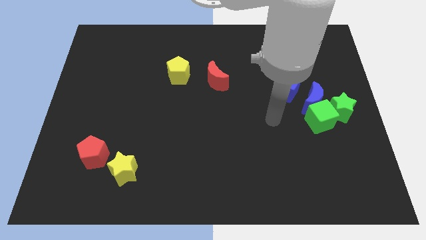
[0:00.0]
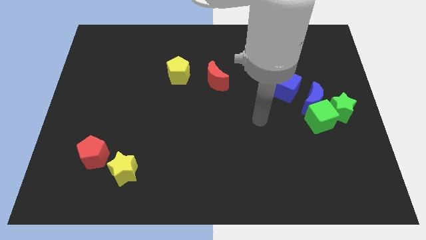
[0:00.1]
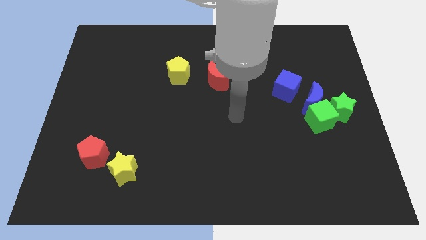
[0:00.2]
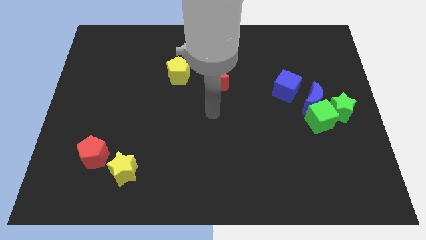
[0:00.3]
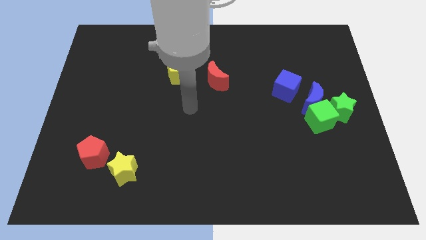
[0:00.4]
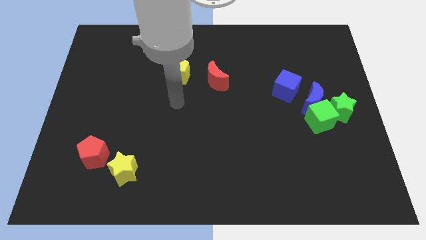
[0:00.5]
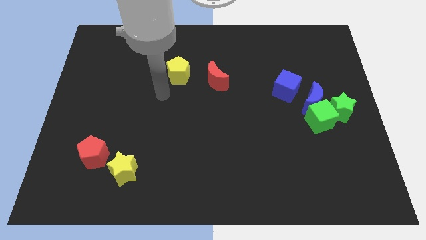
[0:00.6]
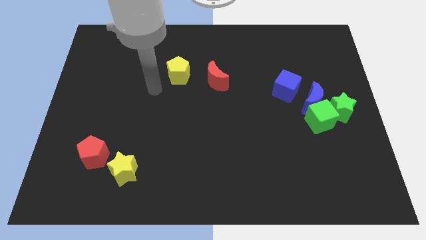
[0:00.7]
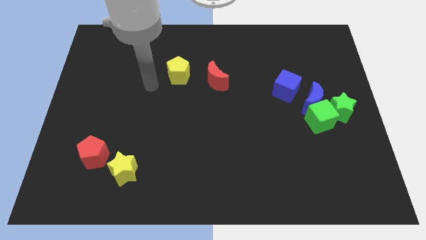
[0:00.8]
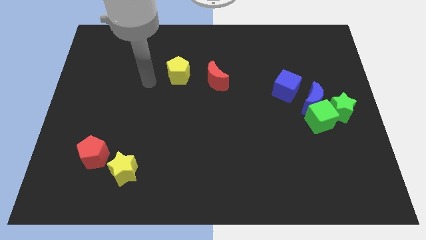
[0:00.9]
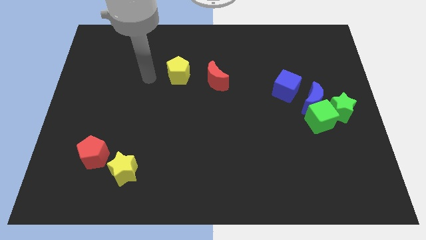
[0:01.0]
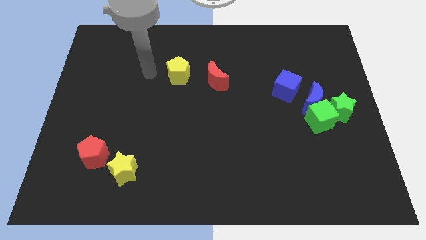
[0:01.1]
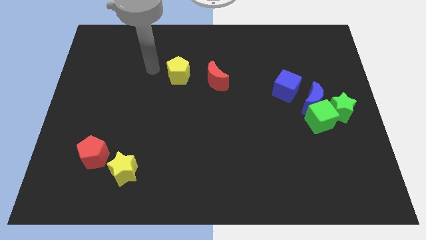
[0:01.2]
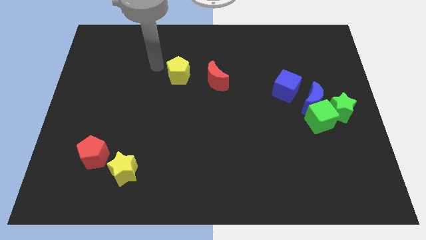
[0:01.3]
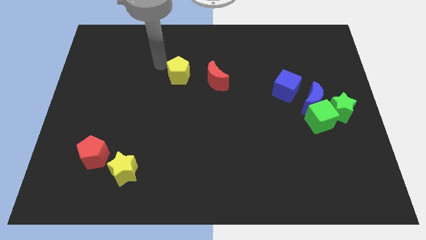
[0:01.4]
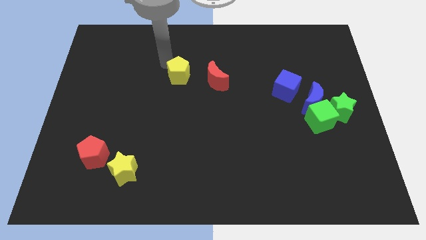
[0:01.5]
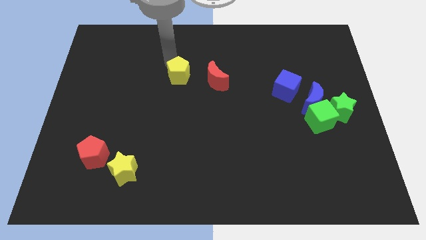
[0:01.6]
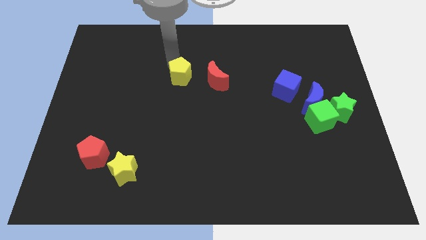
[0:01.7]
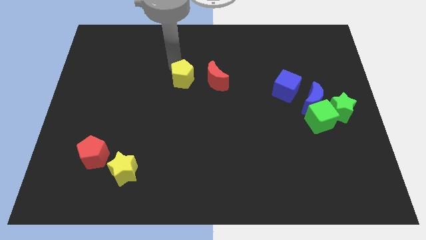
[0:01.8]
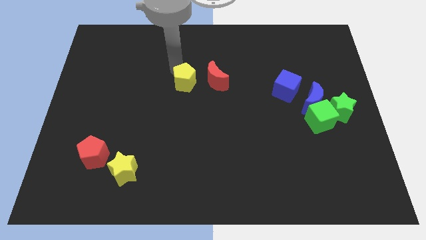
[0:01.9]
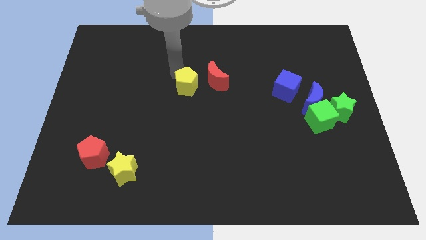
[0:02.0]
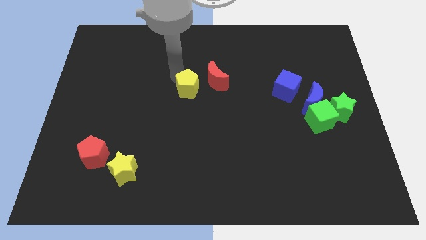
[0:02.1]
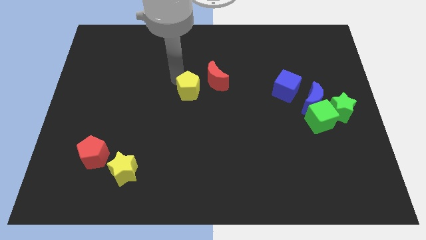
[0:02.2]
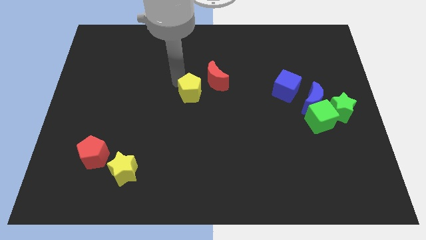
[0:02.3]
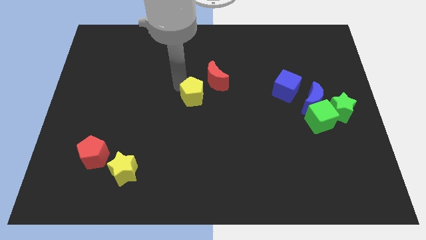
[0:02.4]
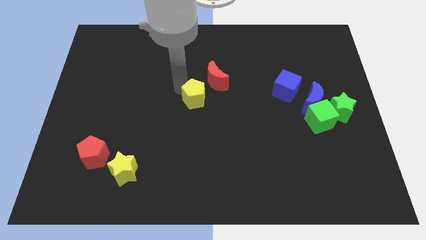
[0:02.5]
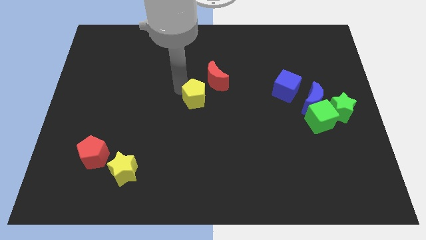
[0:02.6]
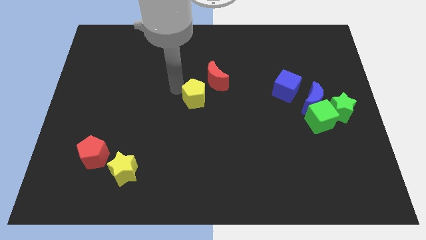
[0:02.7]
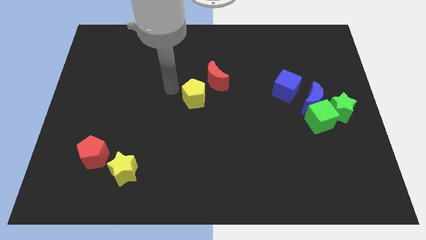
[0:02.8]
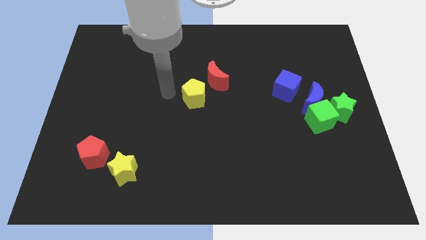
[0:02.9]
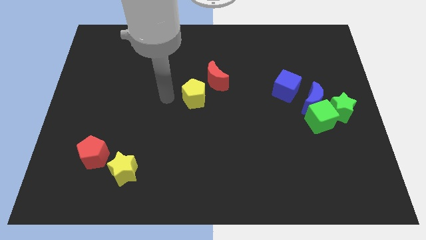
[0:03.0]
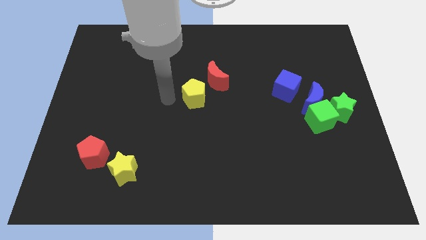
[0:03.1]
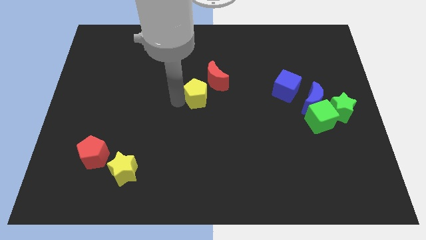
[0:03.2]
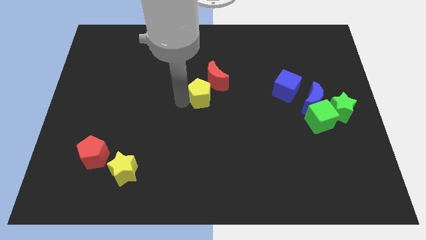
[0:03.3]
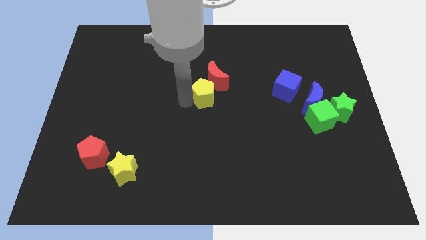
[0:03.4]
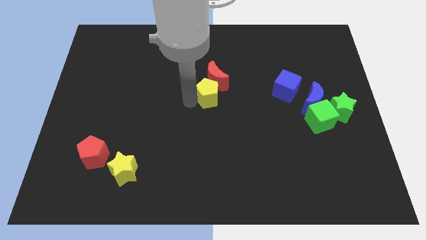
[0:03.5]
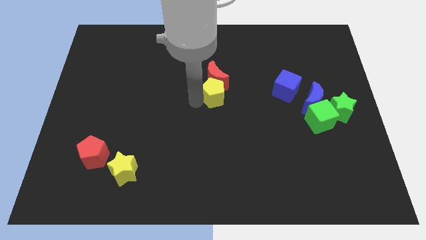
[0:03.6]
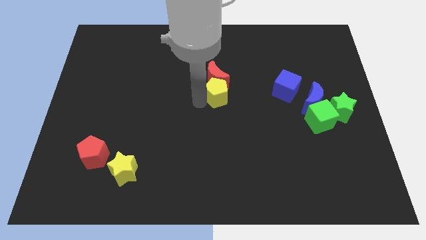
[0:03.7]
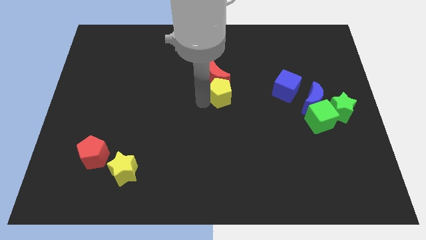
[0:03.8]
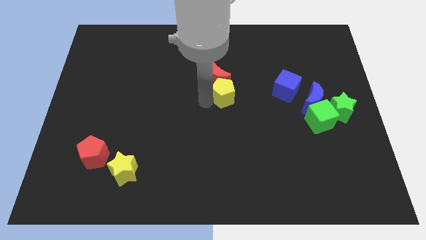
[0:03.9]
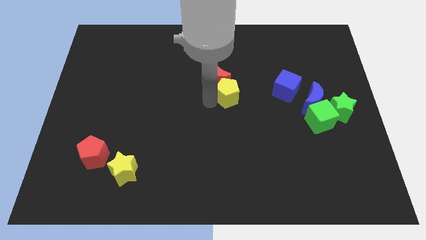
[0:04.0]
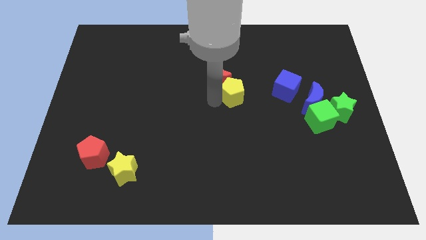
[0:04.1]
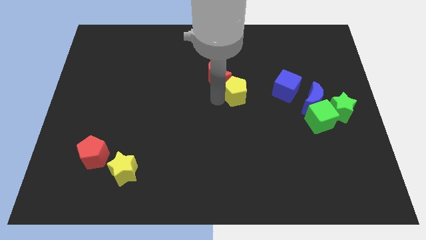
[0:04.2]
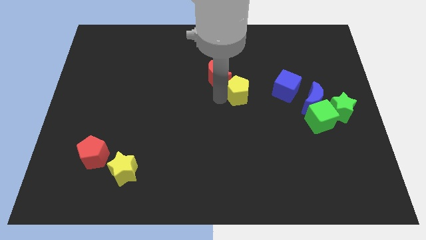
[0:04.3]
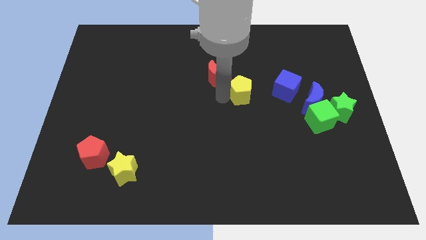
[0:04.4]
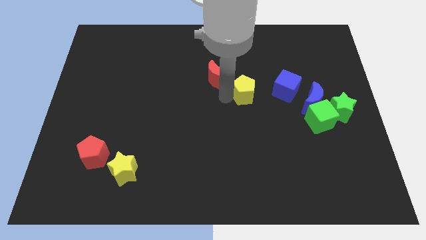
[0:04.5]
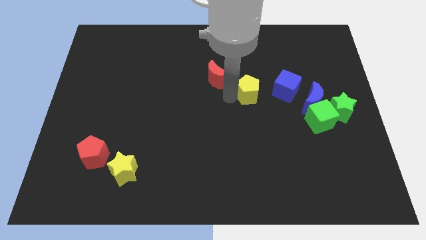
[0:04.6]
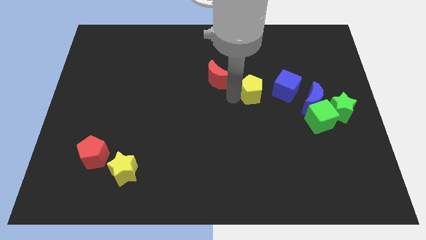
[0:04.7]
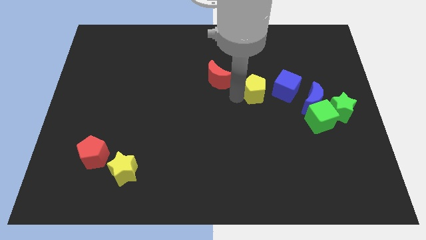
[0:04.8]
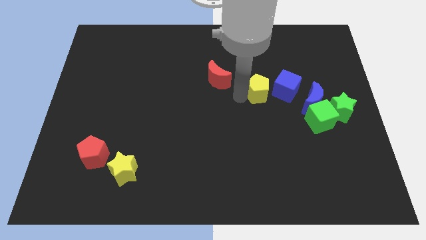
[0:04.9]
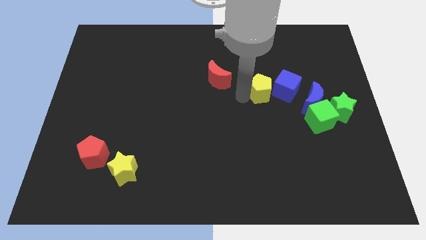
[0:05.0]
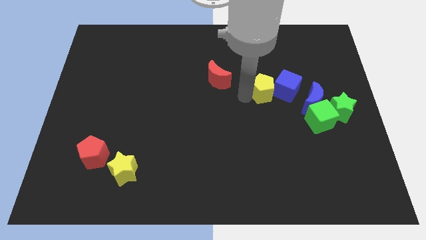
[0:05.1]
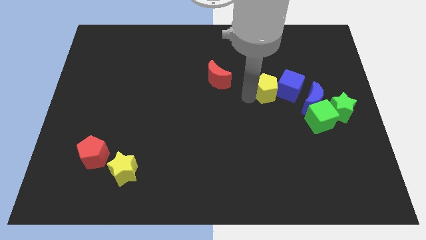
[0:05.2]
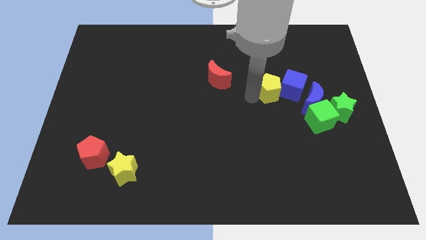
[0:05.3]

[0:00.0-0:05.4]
put the yellow pentagon close to the blue cube

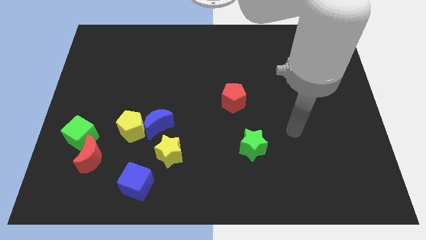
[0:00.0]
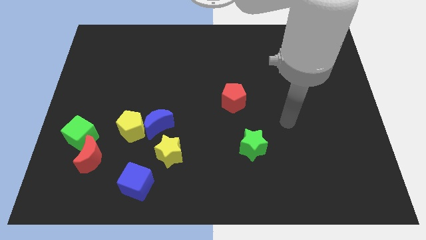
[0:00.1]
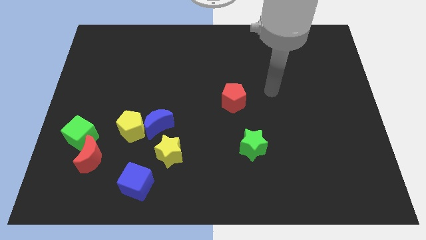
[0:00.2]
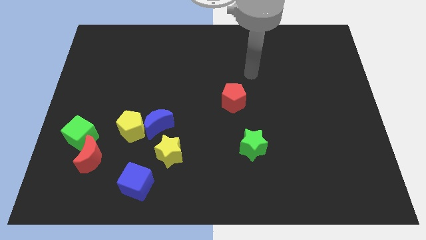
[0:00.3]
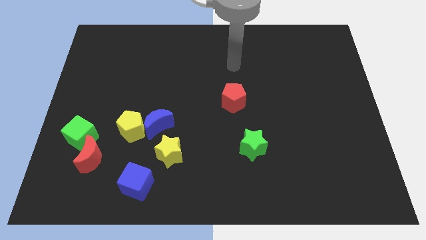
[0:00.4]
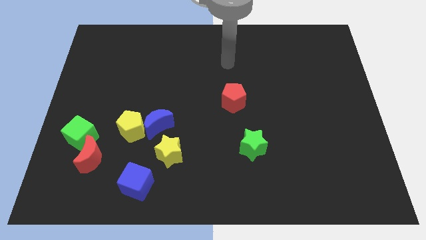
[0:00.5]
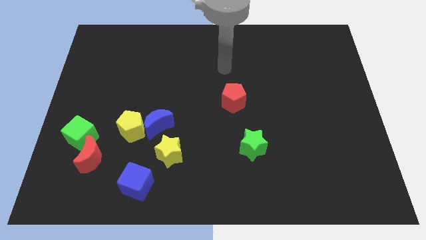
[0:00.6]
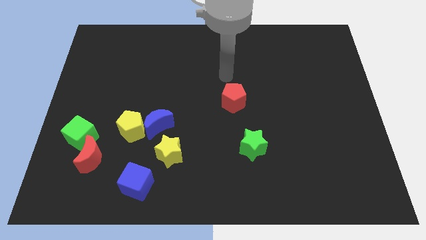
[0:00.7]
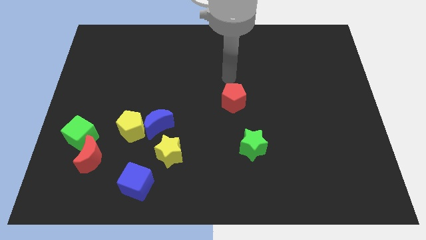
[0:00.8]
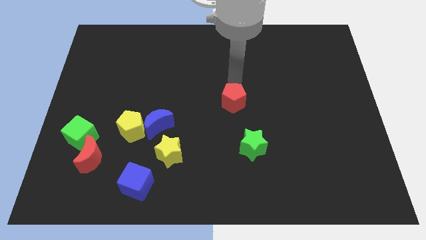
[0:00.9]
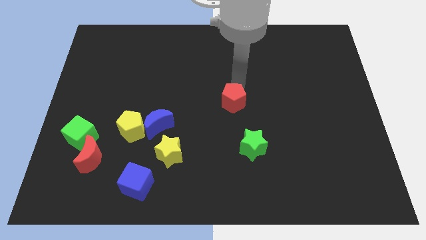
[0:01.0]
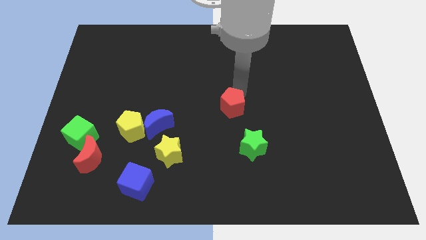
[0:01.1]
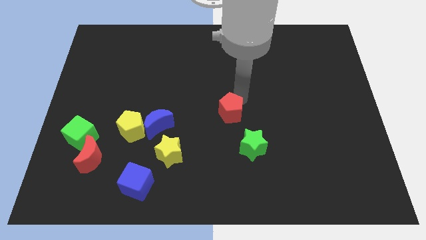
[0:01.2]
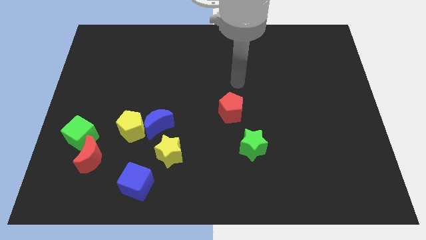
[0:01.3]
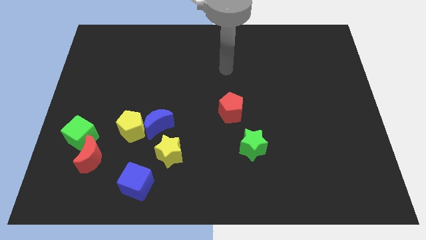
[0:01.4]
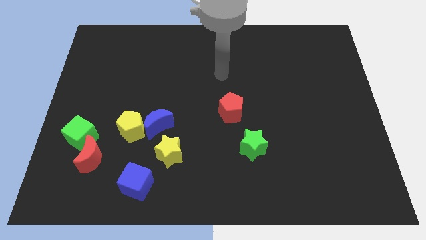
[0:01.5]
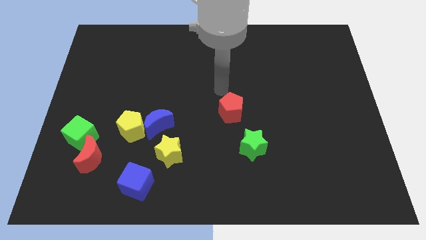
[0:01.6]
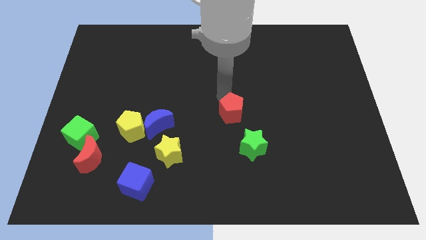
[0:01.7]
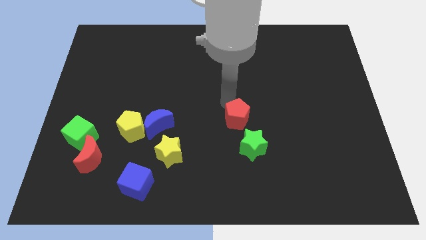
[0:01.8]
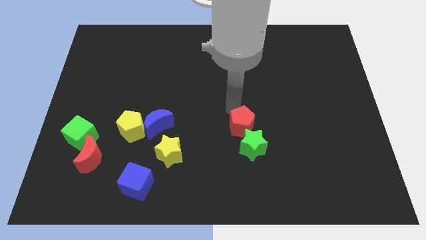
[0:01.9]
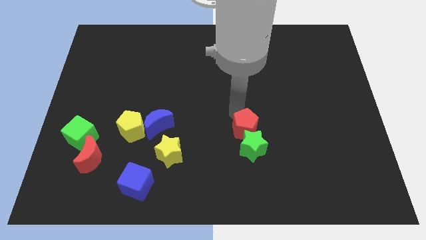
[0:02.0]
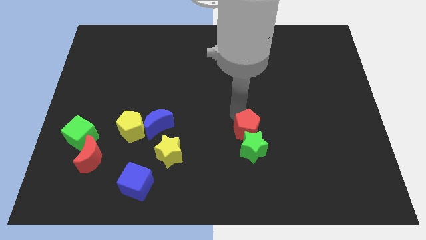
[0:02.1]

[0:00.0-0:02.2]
push the red pentagon next to the green star

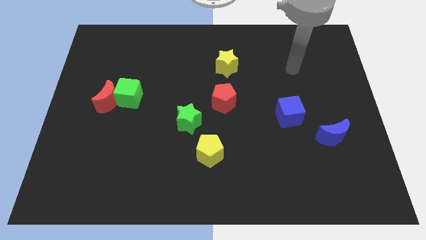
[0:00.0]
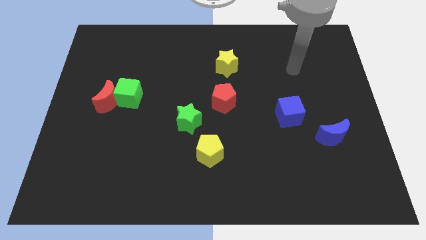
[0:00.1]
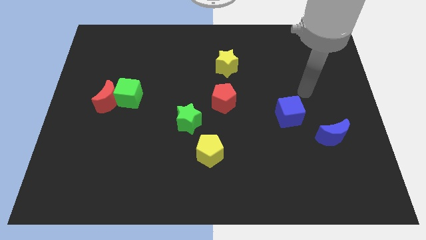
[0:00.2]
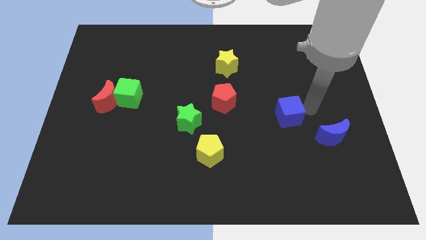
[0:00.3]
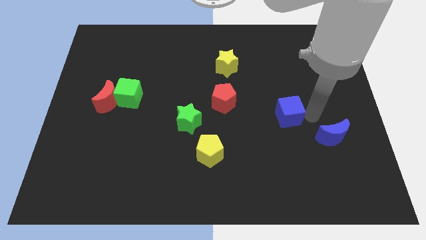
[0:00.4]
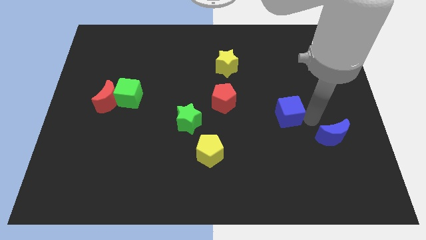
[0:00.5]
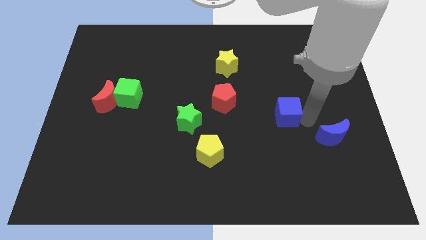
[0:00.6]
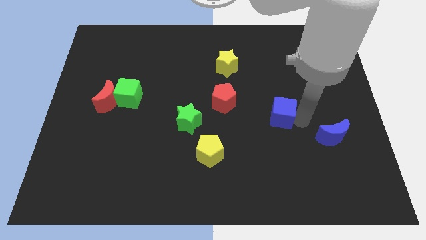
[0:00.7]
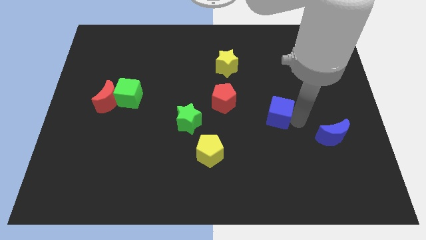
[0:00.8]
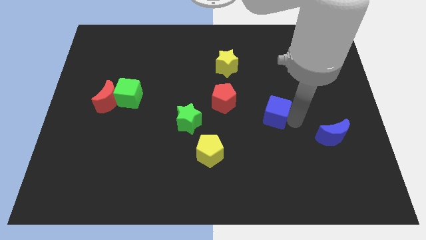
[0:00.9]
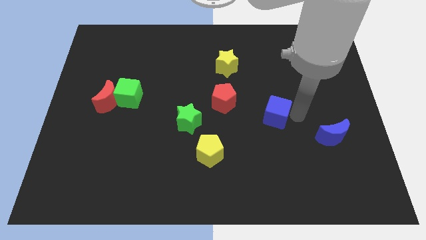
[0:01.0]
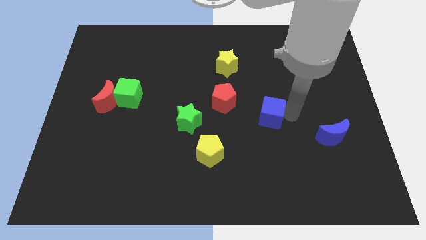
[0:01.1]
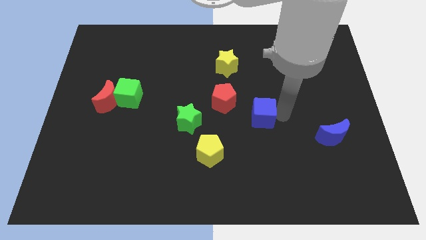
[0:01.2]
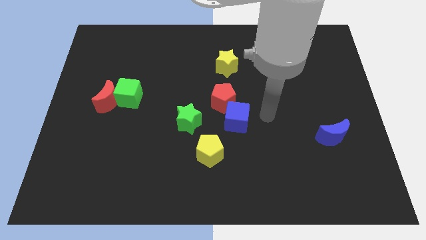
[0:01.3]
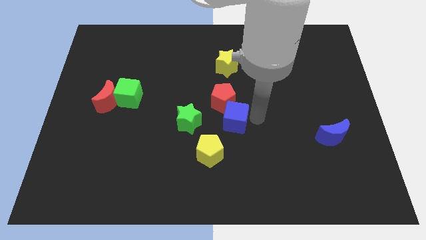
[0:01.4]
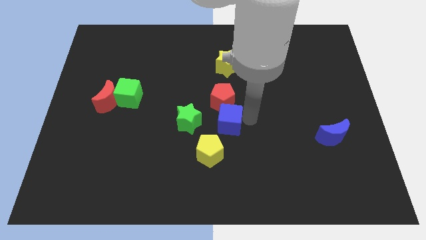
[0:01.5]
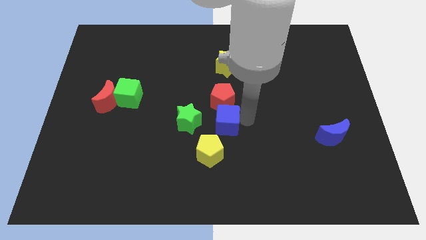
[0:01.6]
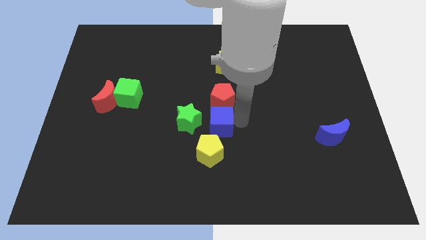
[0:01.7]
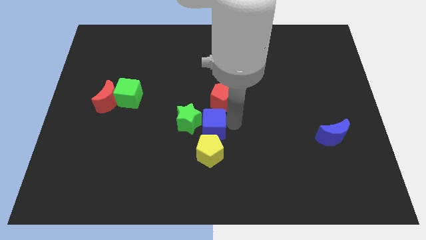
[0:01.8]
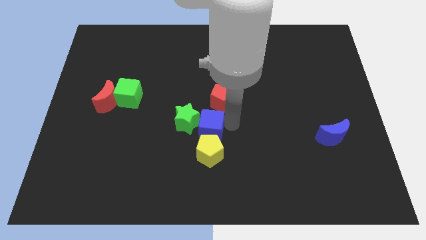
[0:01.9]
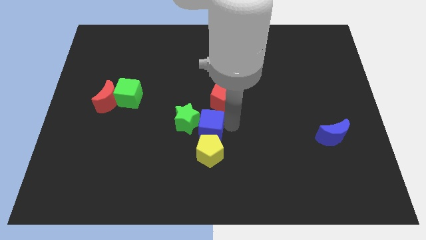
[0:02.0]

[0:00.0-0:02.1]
slide the blue cube close to the green star
